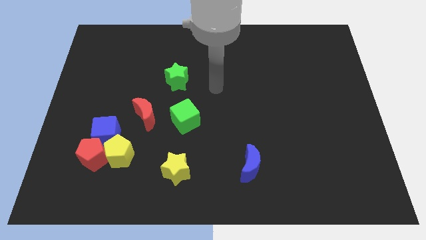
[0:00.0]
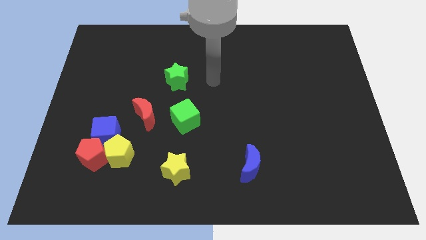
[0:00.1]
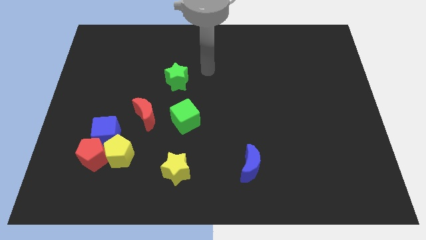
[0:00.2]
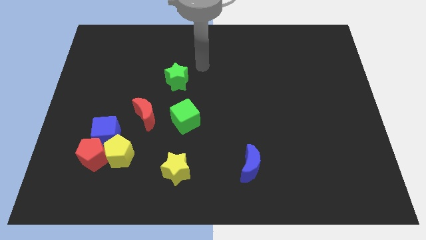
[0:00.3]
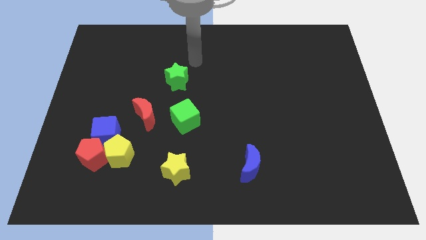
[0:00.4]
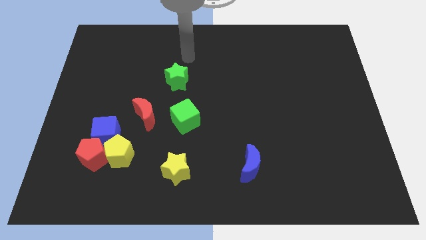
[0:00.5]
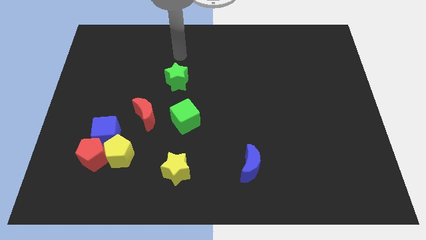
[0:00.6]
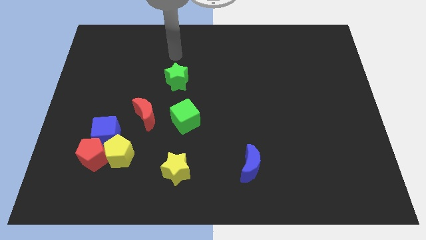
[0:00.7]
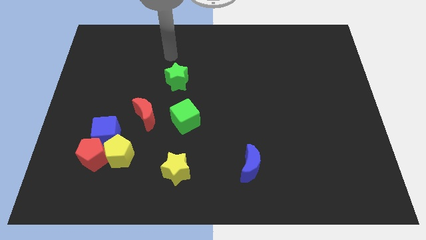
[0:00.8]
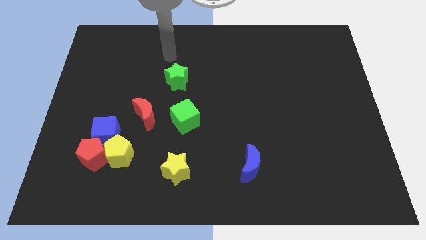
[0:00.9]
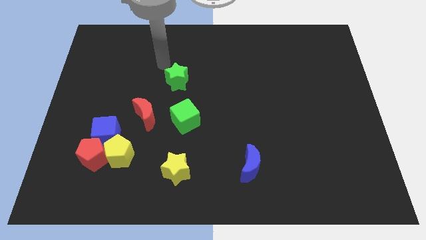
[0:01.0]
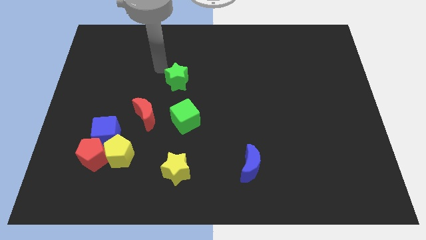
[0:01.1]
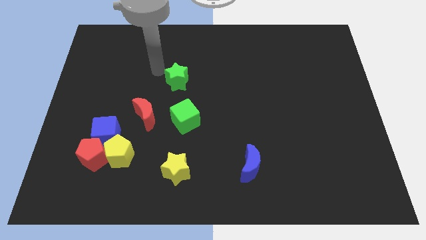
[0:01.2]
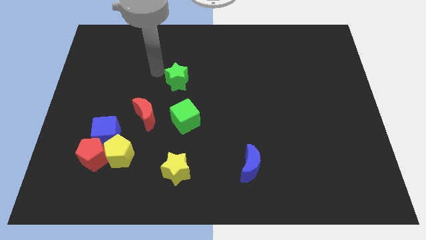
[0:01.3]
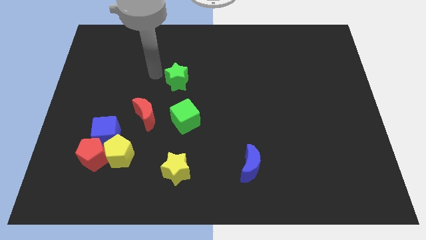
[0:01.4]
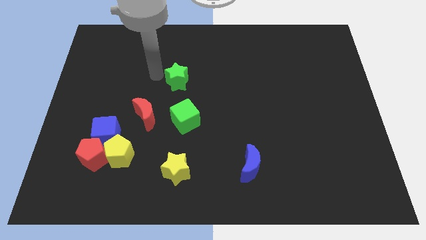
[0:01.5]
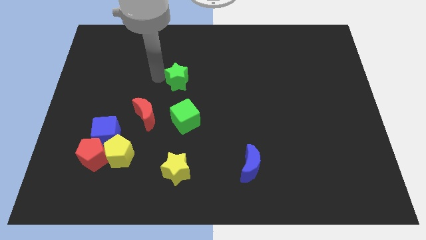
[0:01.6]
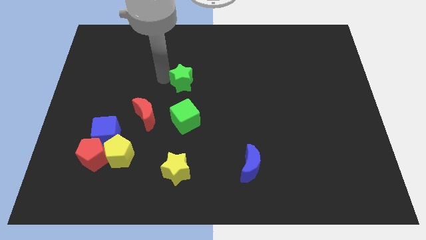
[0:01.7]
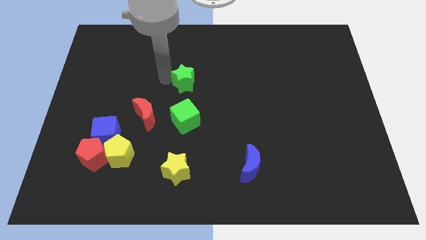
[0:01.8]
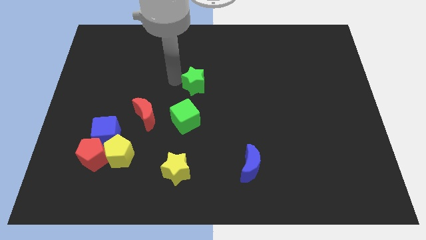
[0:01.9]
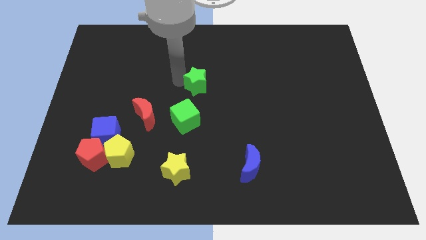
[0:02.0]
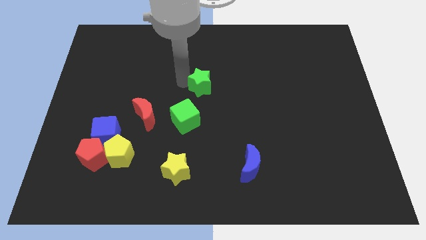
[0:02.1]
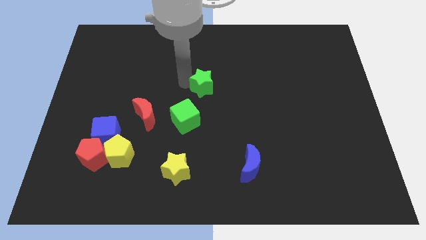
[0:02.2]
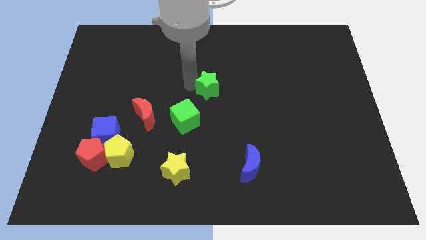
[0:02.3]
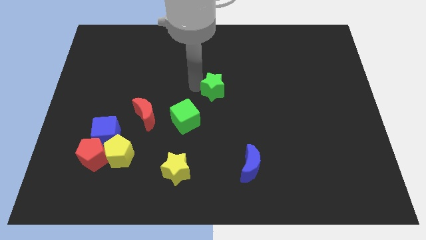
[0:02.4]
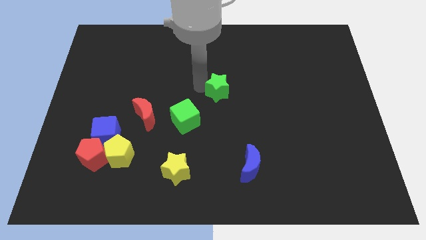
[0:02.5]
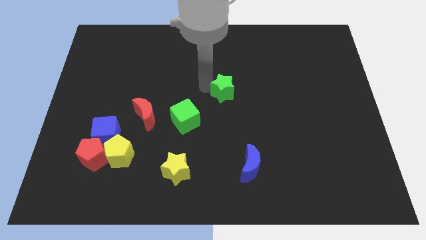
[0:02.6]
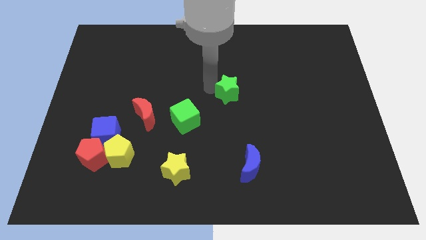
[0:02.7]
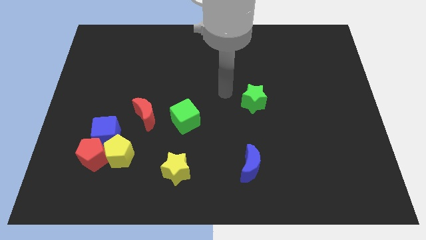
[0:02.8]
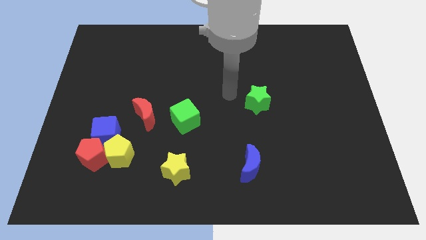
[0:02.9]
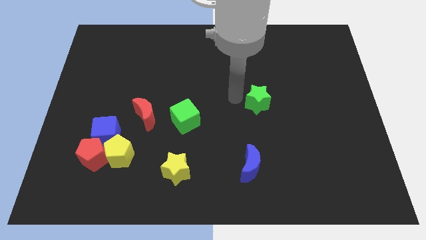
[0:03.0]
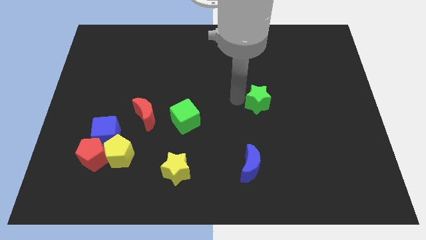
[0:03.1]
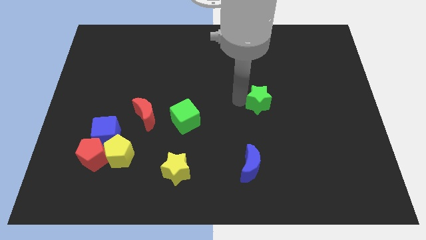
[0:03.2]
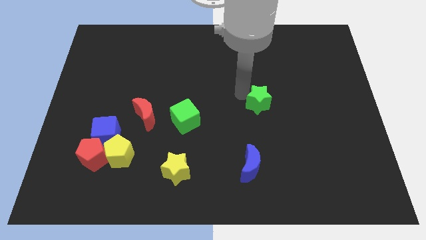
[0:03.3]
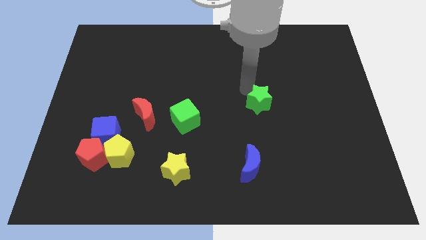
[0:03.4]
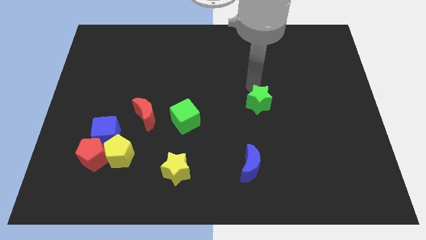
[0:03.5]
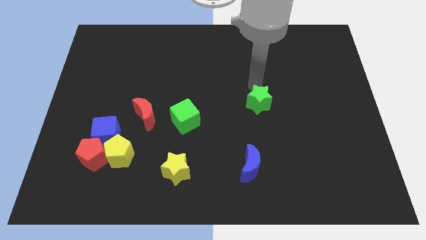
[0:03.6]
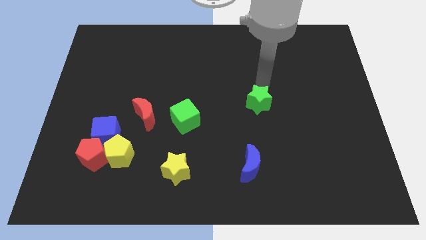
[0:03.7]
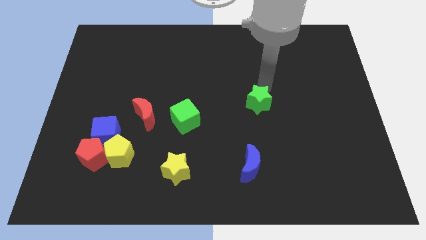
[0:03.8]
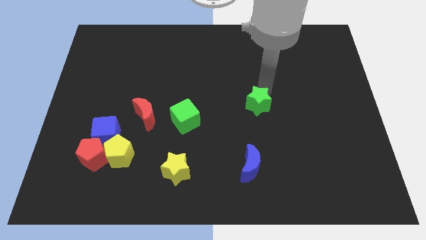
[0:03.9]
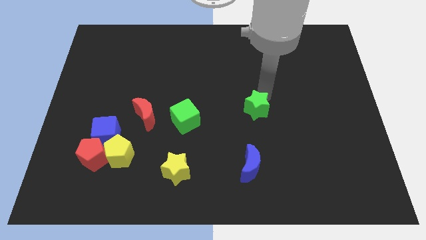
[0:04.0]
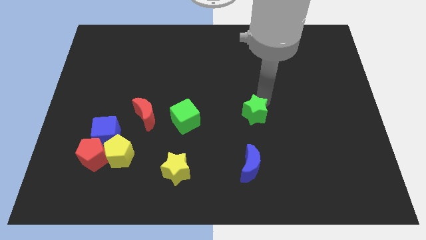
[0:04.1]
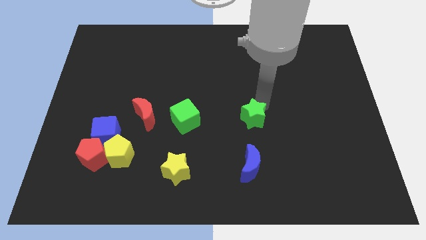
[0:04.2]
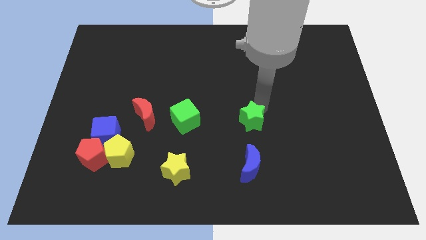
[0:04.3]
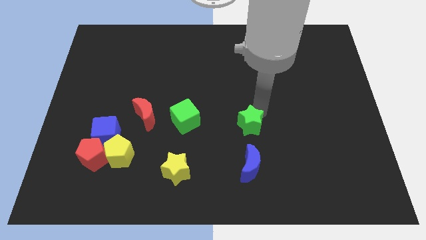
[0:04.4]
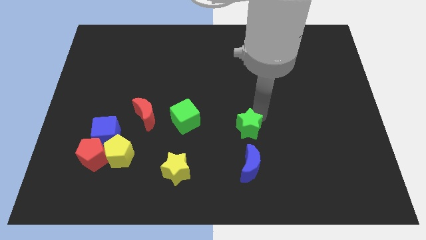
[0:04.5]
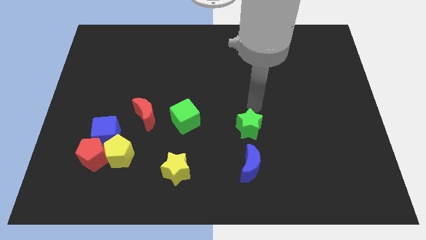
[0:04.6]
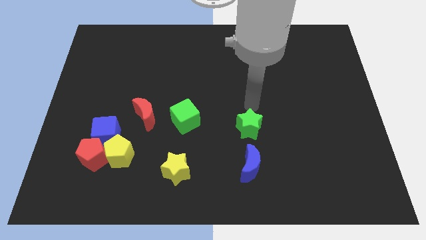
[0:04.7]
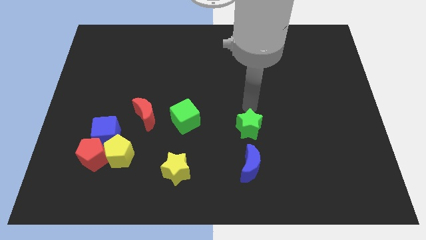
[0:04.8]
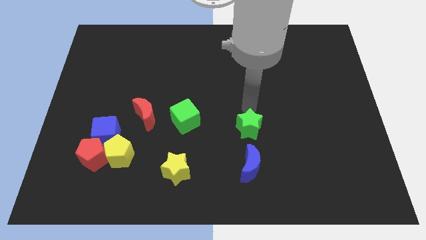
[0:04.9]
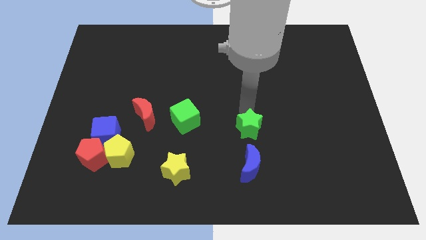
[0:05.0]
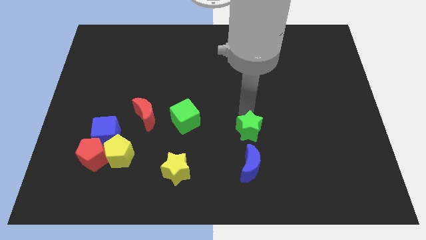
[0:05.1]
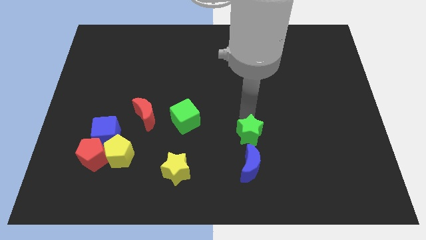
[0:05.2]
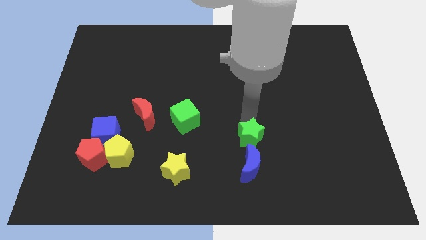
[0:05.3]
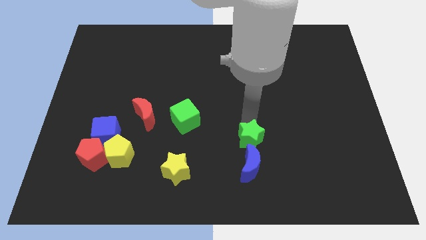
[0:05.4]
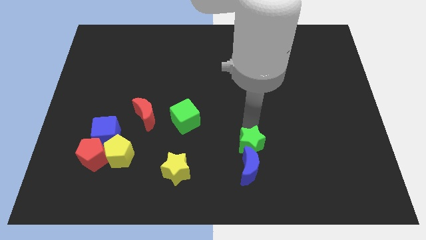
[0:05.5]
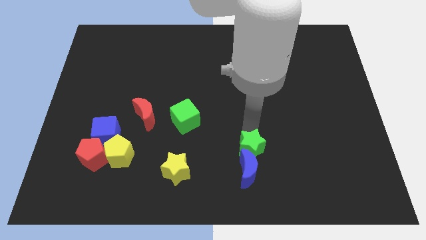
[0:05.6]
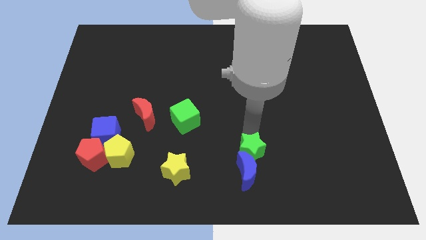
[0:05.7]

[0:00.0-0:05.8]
slide the green star close to the blue moon

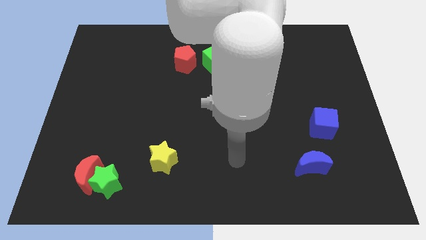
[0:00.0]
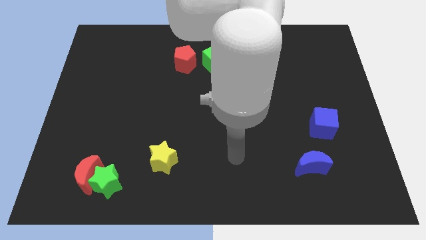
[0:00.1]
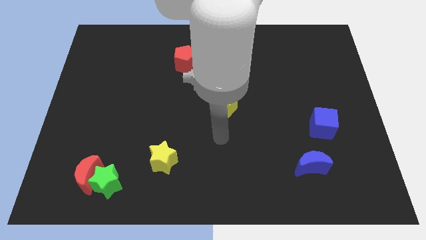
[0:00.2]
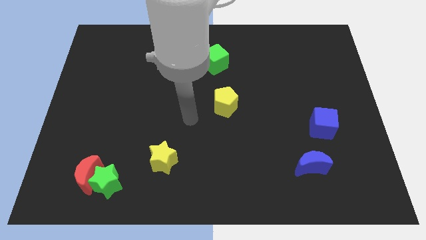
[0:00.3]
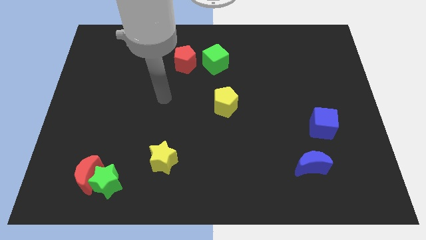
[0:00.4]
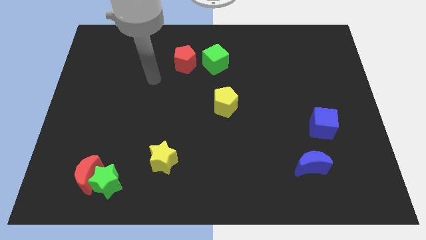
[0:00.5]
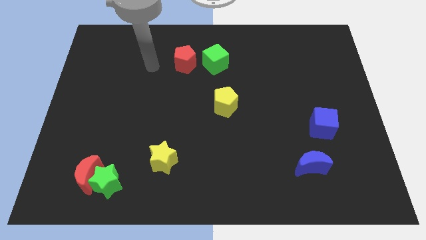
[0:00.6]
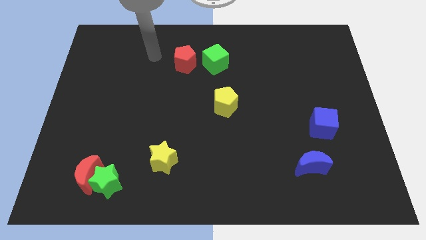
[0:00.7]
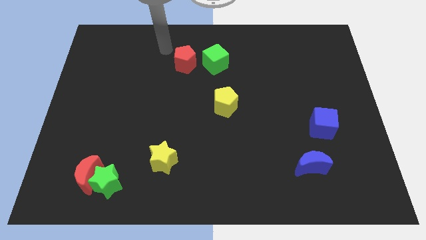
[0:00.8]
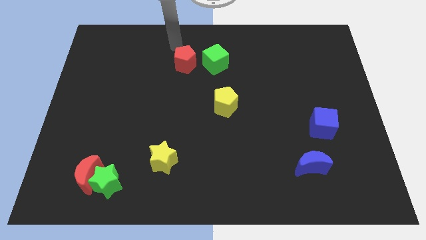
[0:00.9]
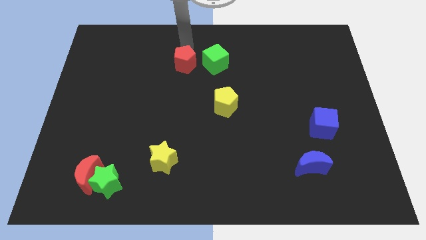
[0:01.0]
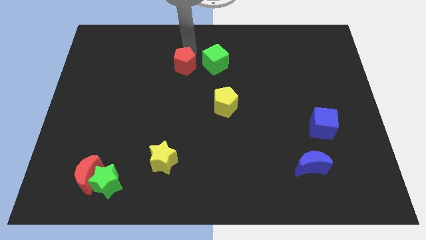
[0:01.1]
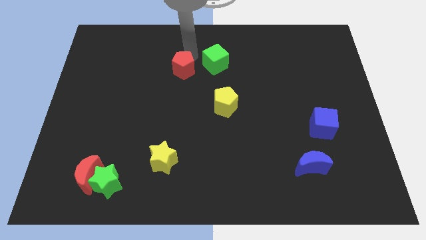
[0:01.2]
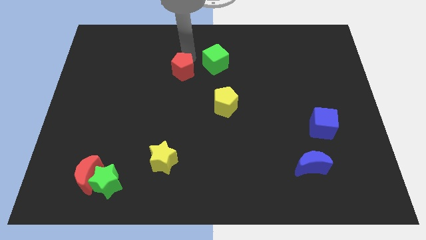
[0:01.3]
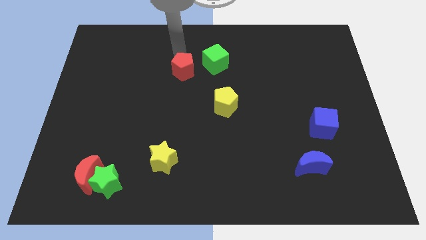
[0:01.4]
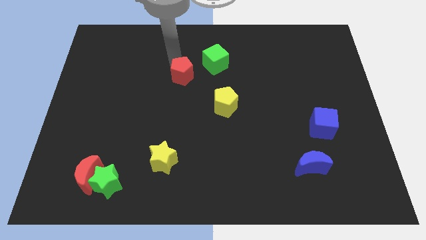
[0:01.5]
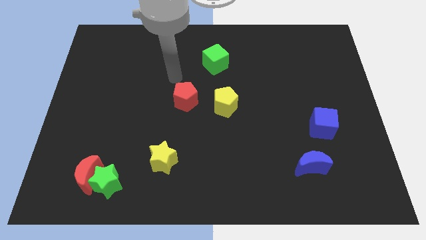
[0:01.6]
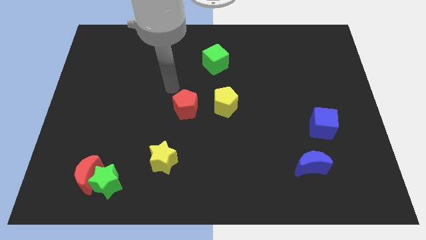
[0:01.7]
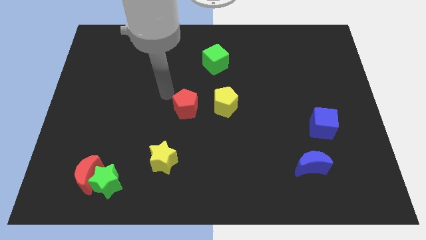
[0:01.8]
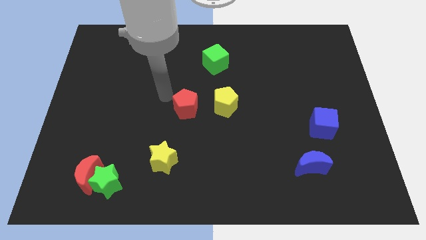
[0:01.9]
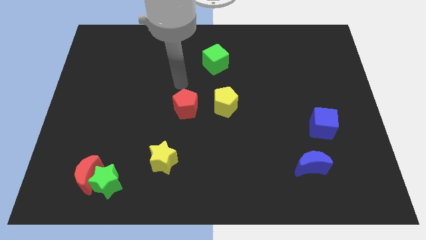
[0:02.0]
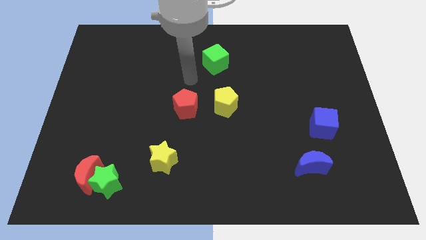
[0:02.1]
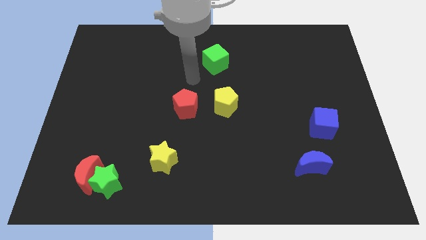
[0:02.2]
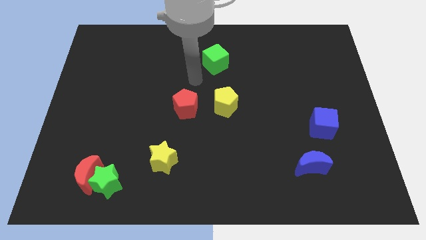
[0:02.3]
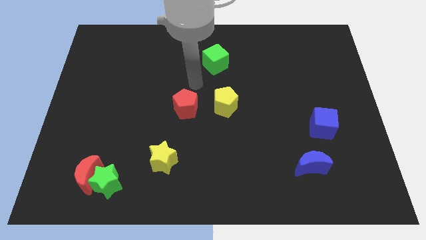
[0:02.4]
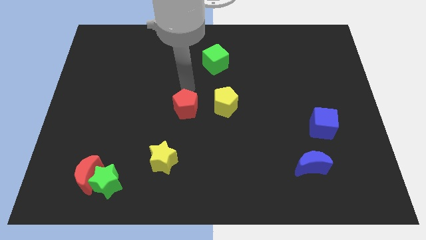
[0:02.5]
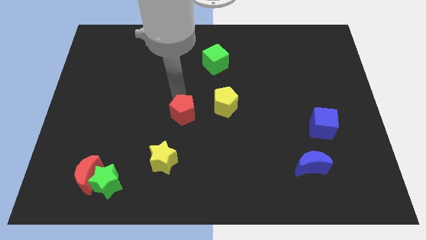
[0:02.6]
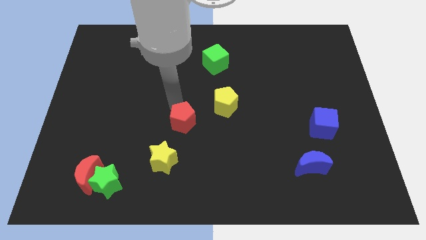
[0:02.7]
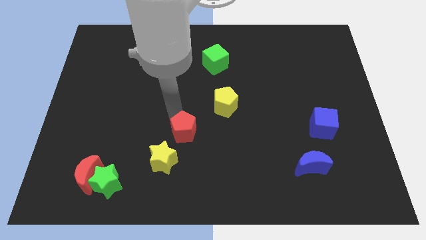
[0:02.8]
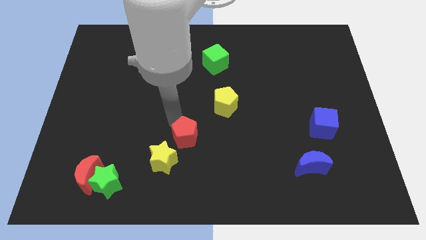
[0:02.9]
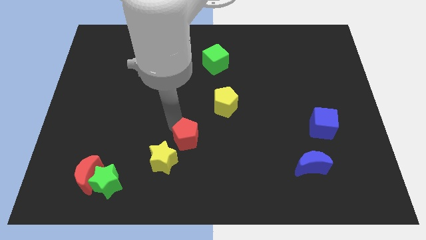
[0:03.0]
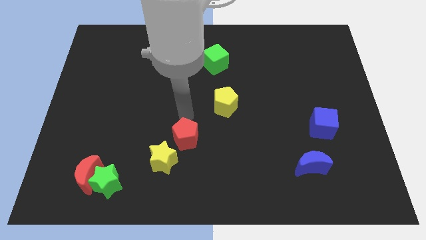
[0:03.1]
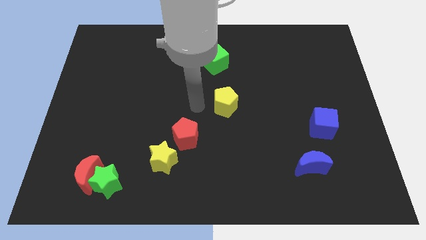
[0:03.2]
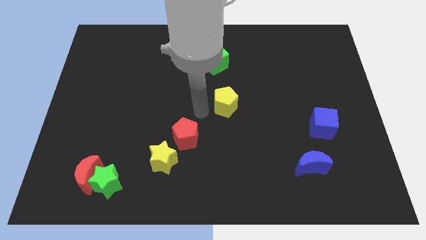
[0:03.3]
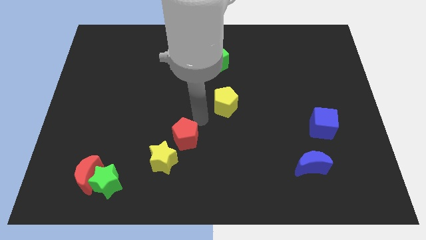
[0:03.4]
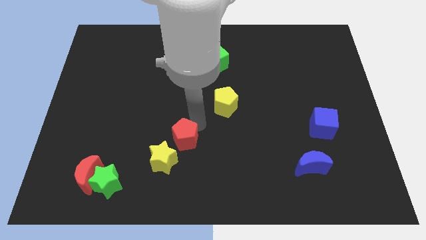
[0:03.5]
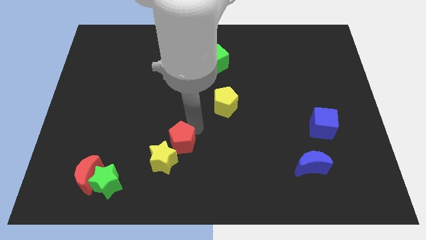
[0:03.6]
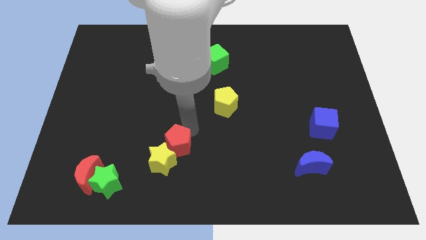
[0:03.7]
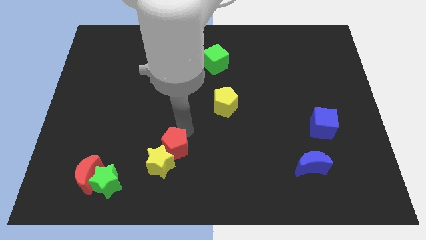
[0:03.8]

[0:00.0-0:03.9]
slide the red pentagon towards the yellow star
